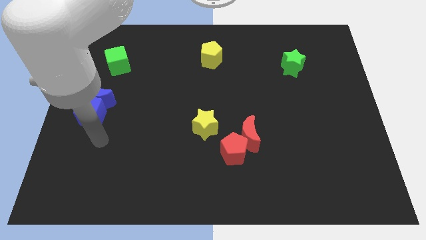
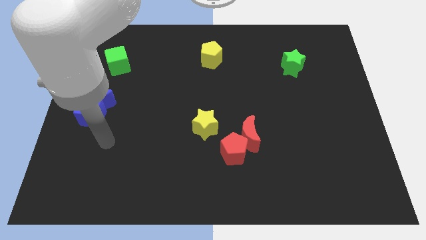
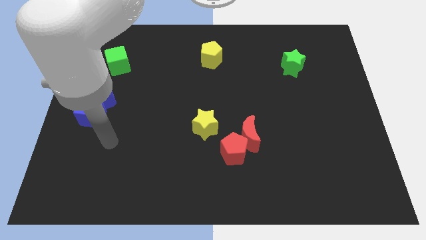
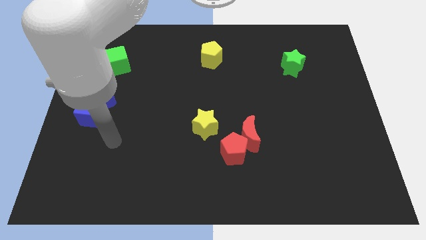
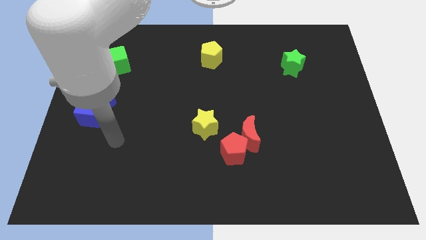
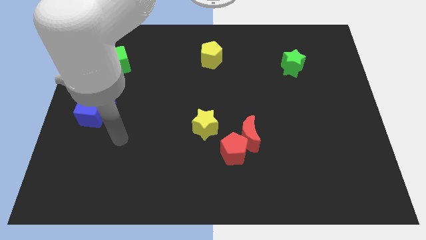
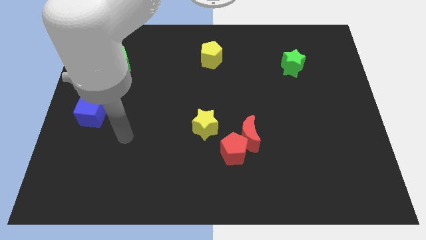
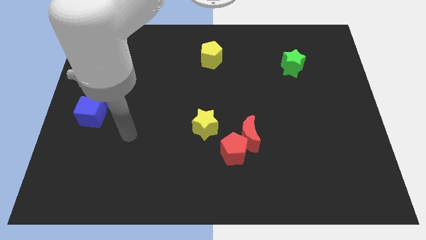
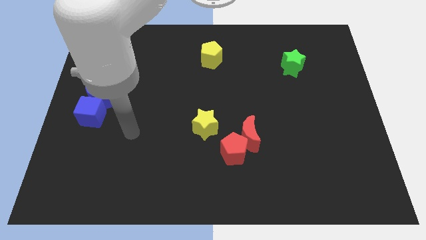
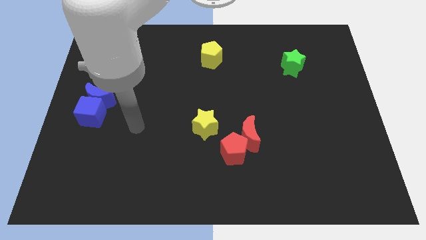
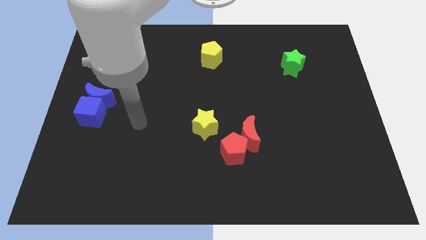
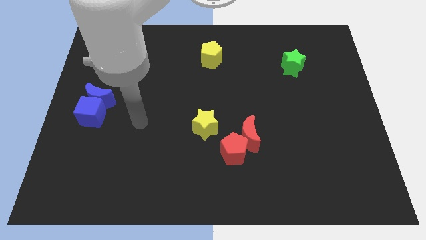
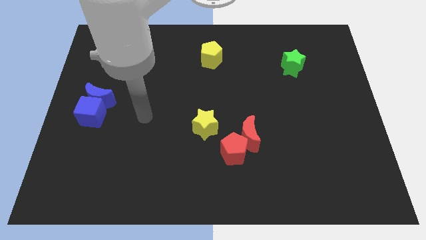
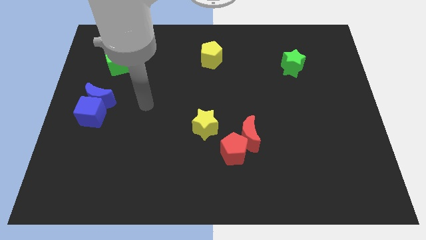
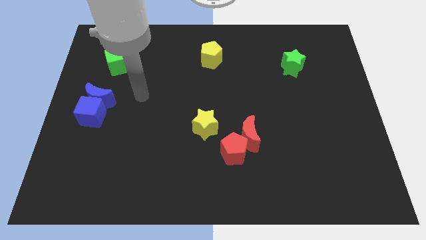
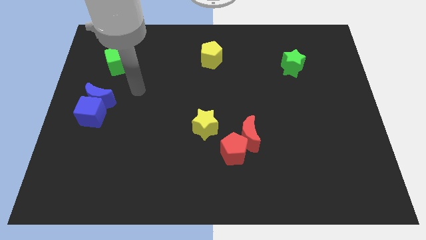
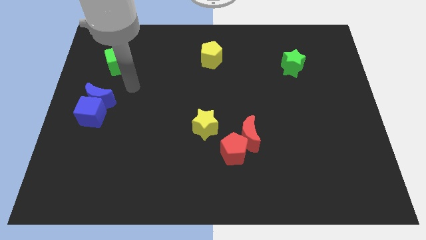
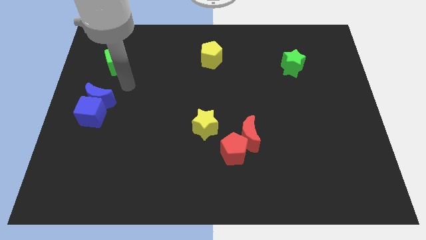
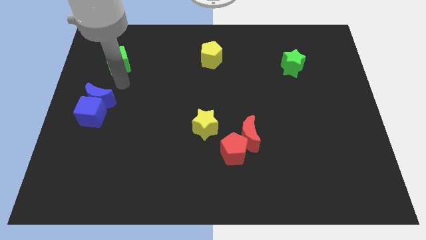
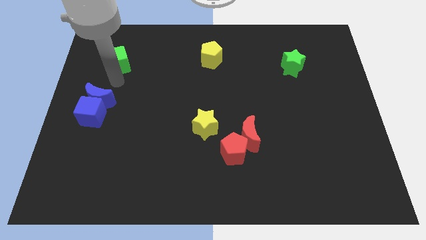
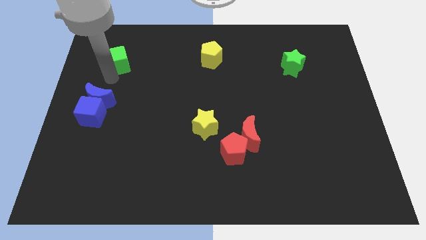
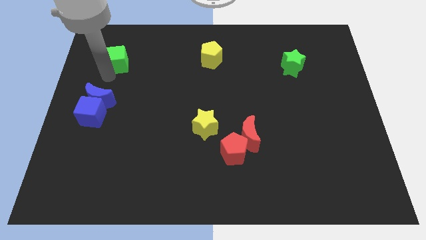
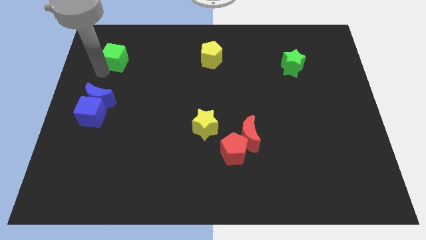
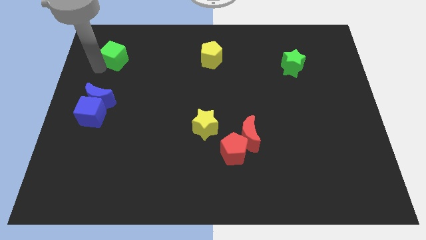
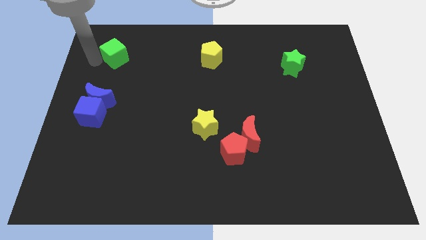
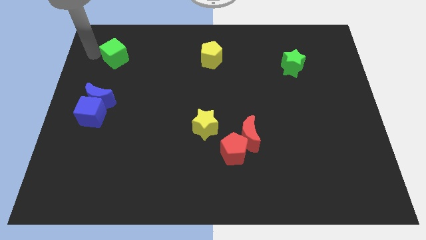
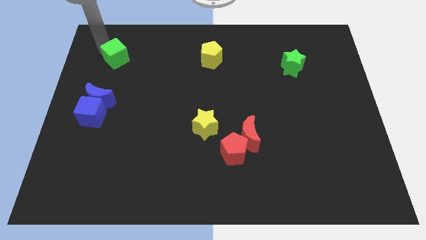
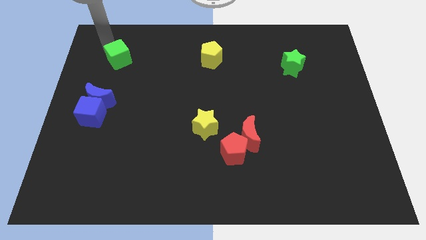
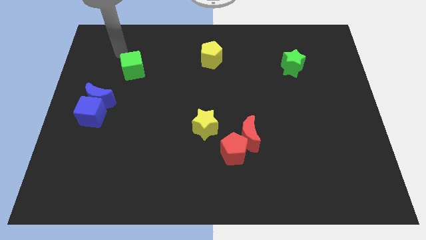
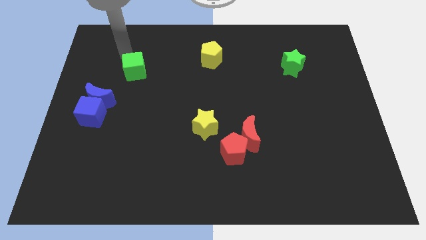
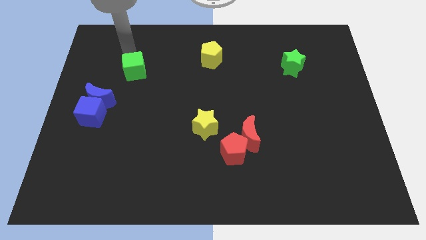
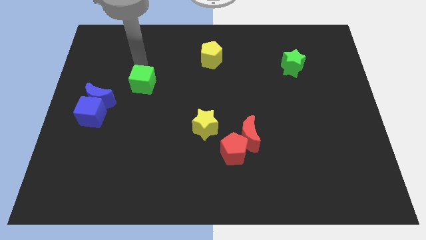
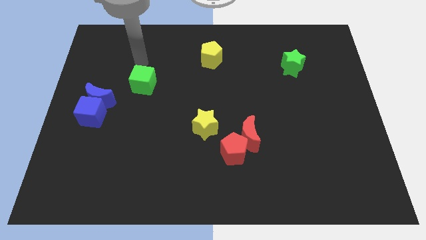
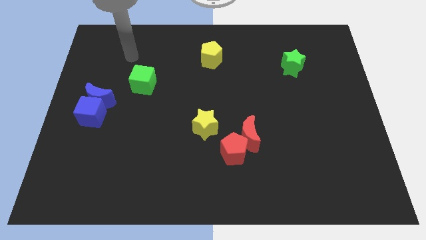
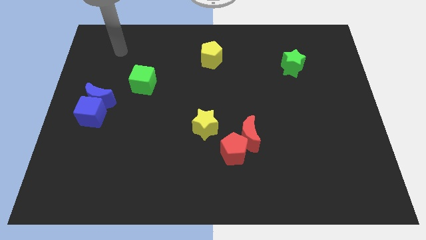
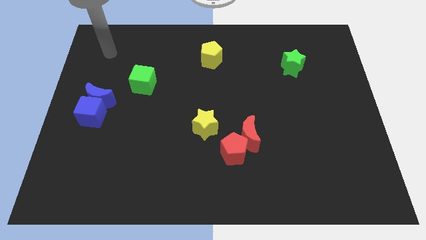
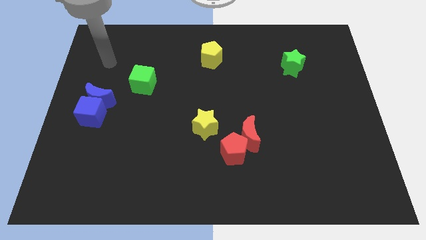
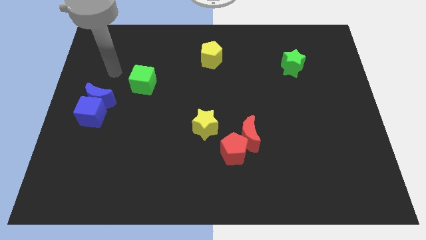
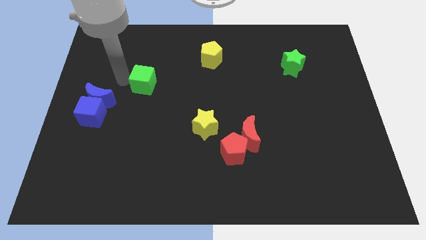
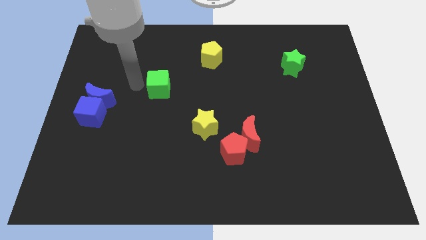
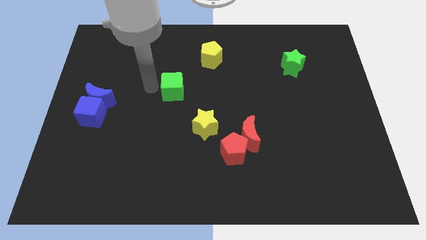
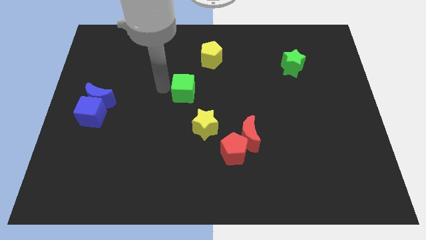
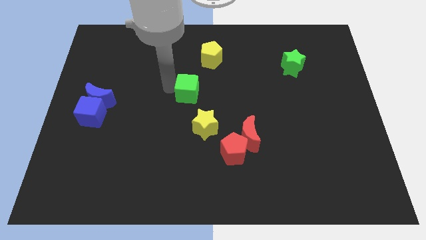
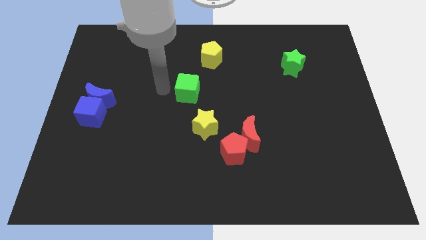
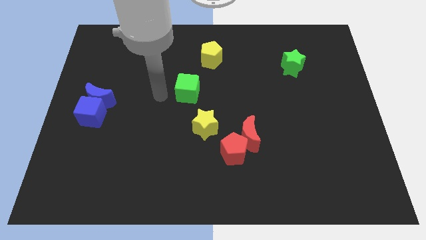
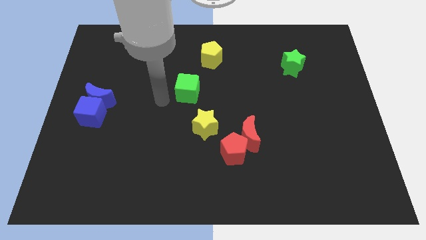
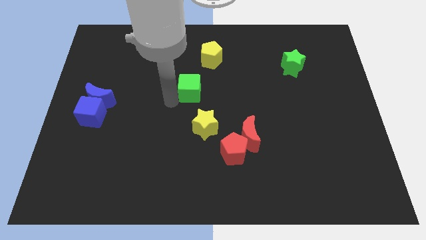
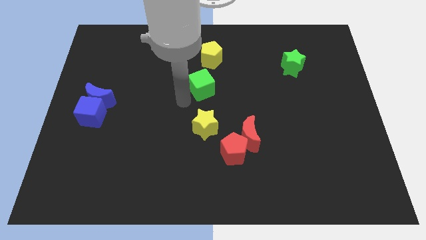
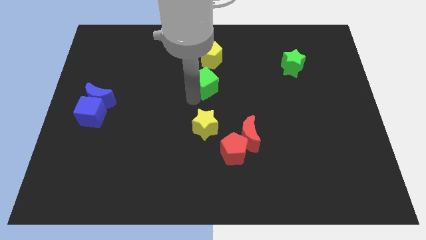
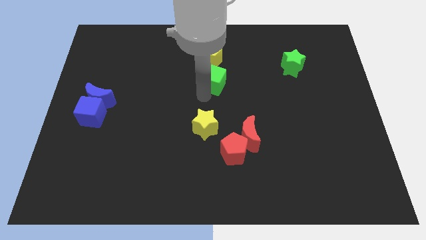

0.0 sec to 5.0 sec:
place the green cube in between the yellow pentagon and yellow star

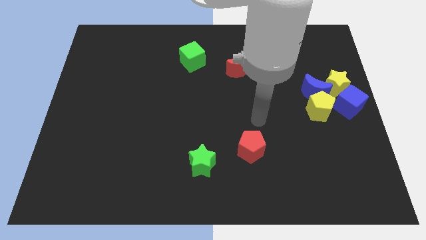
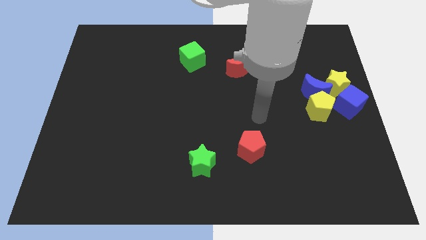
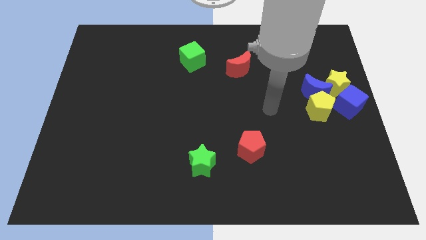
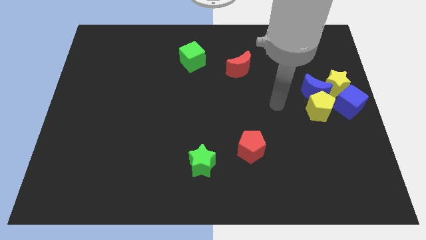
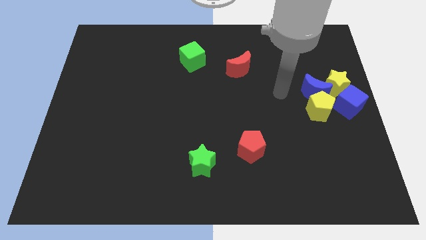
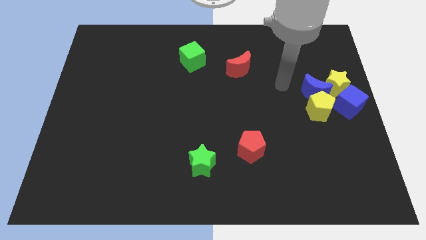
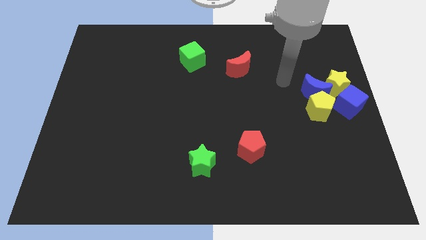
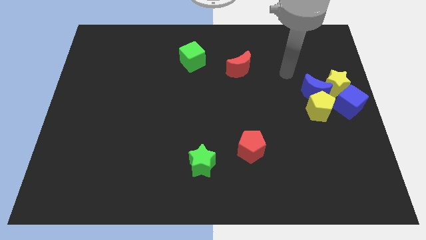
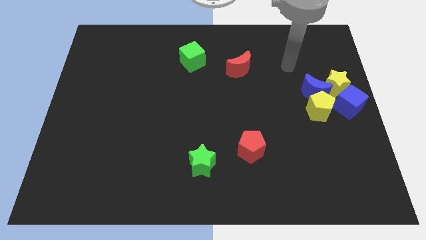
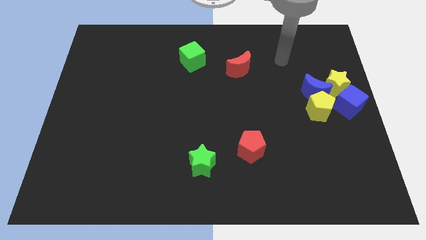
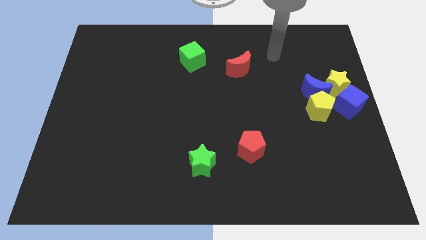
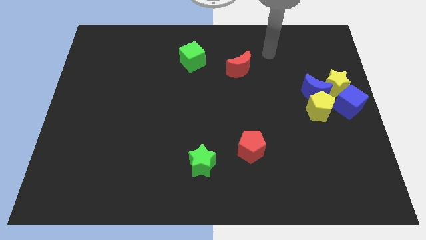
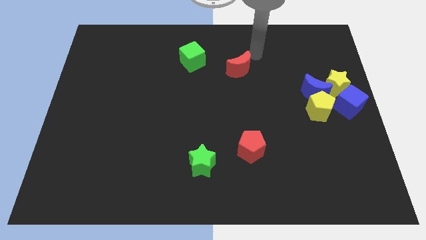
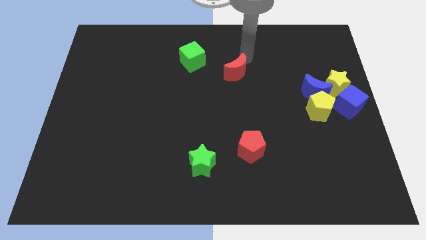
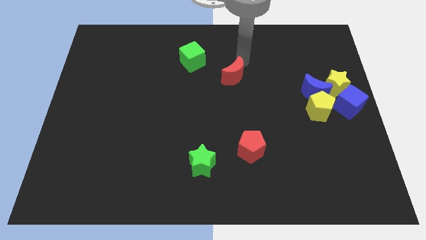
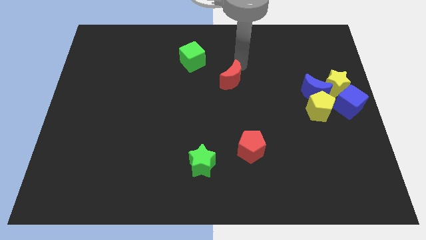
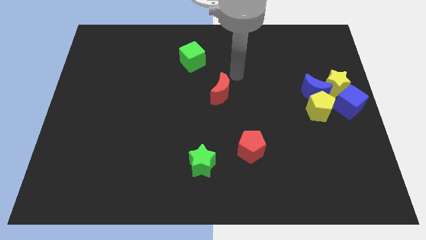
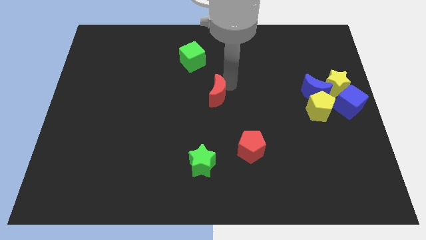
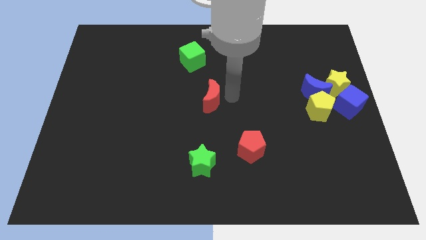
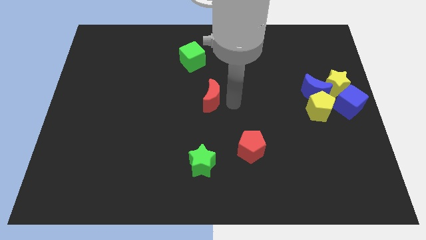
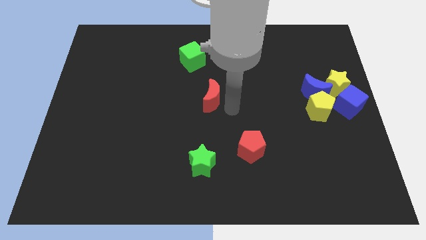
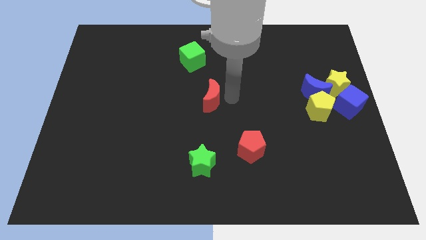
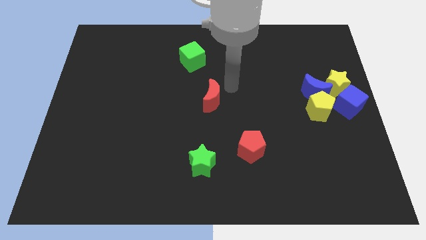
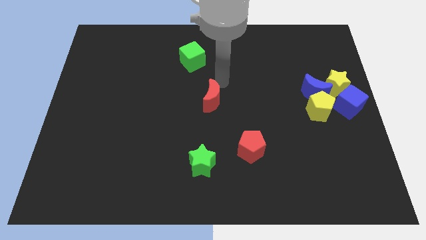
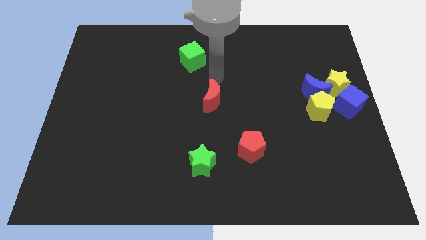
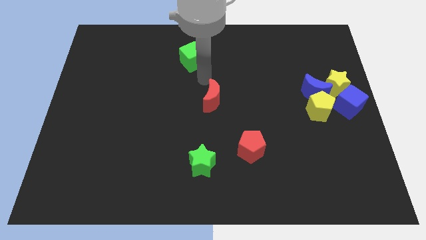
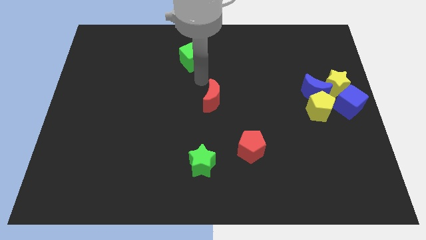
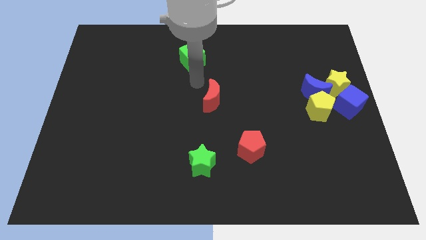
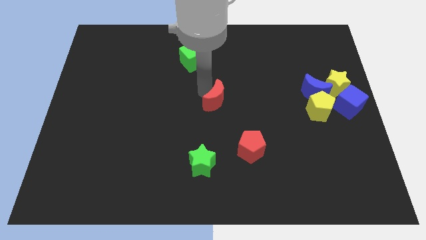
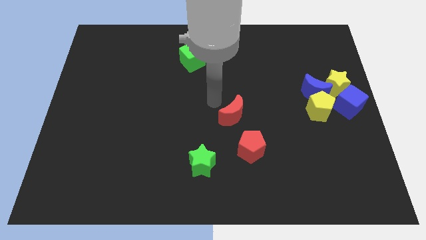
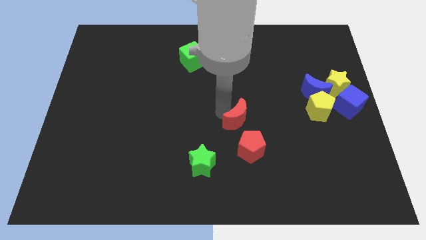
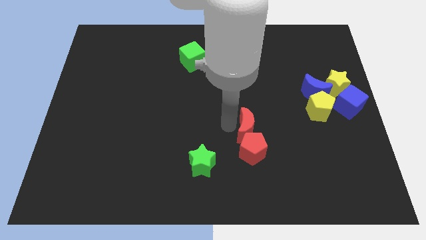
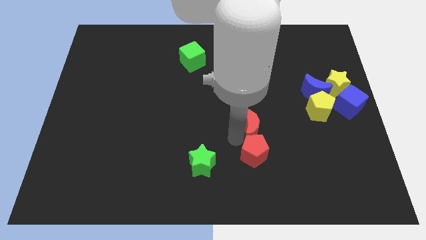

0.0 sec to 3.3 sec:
push the red crescent into the top of red pentagon

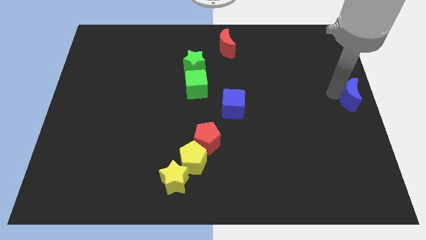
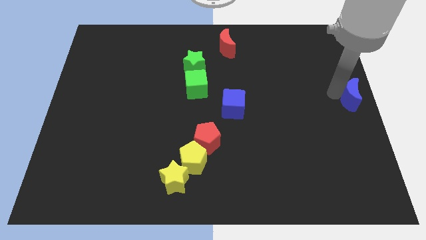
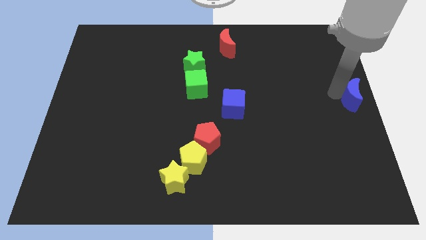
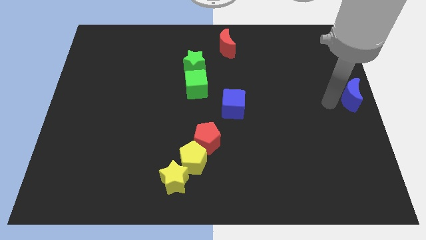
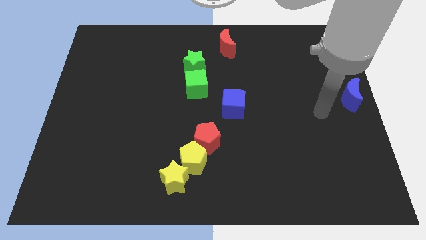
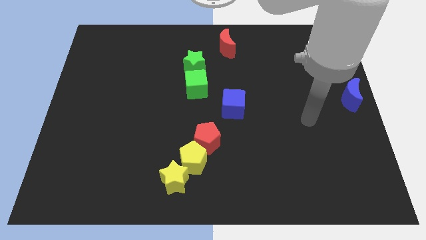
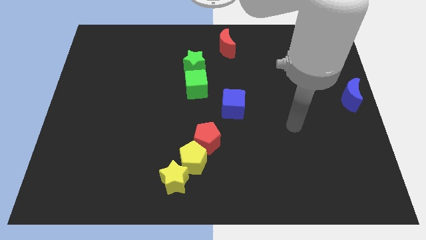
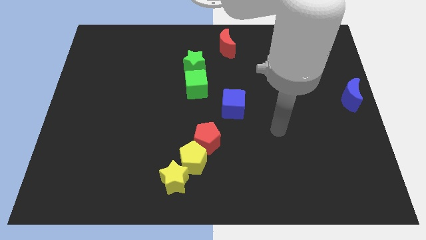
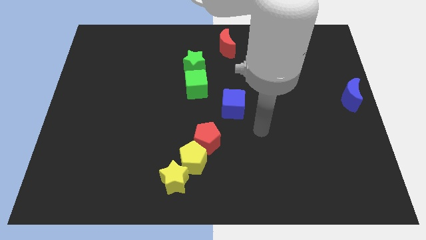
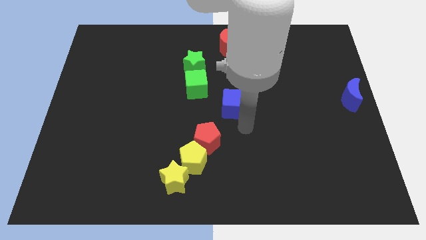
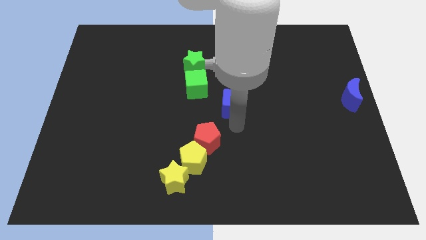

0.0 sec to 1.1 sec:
move your arm away from blue moon
